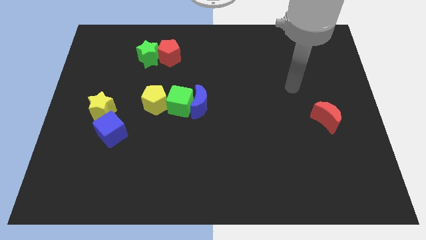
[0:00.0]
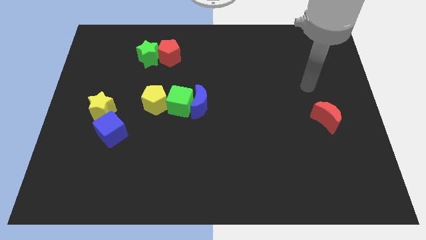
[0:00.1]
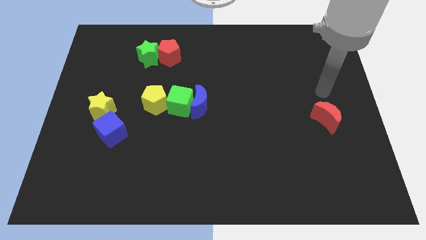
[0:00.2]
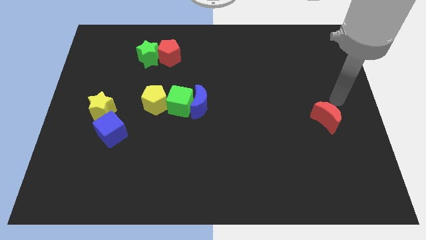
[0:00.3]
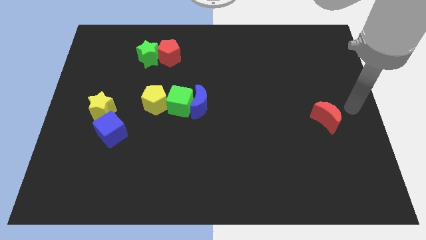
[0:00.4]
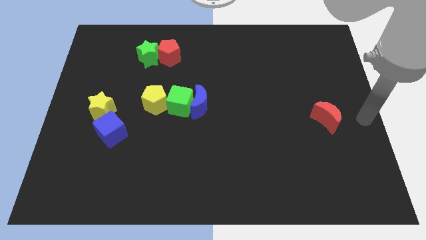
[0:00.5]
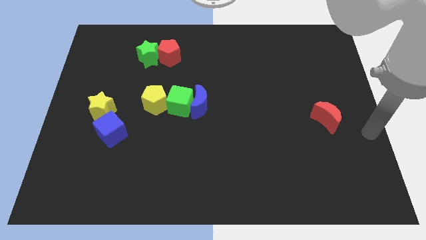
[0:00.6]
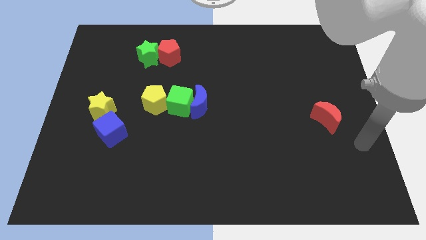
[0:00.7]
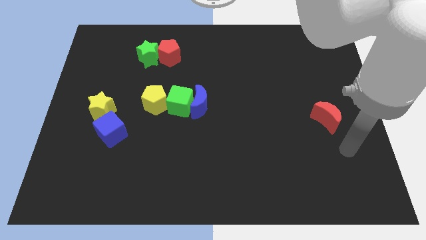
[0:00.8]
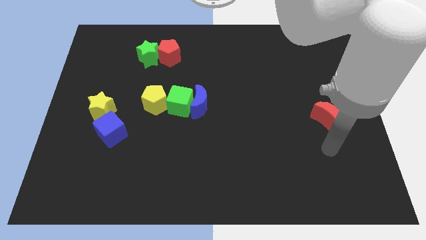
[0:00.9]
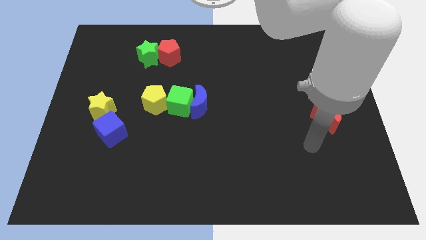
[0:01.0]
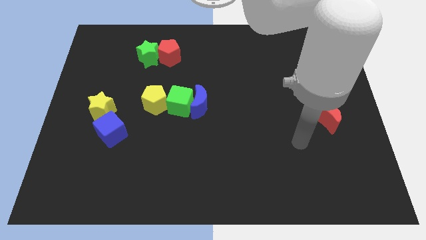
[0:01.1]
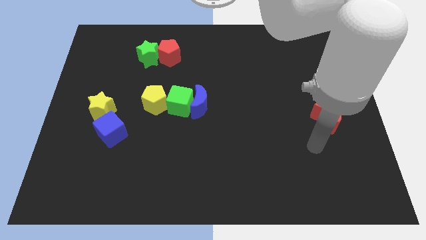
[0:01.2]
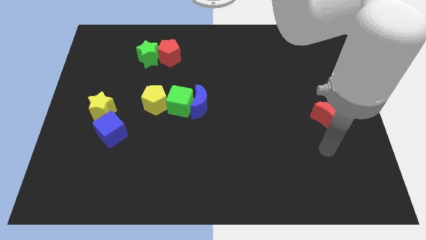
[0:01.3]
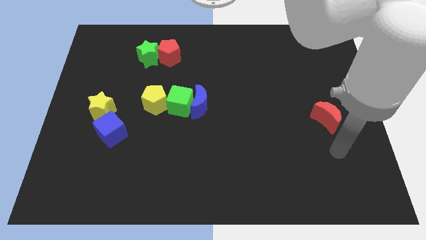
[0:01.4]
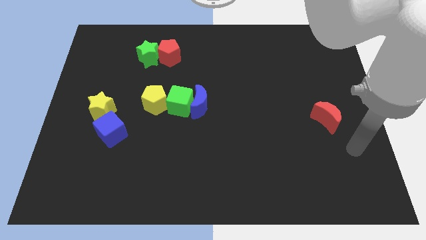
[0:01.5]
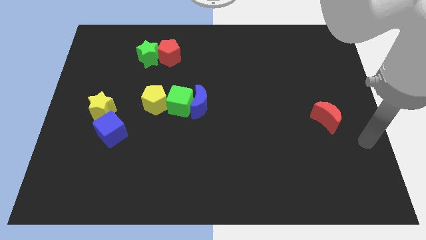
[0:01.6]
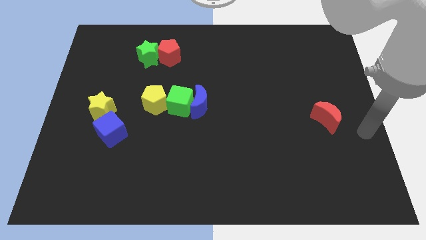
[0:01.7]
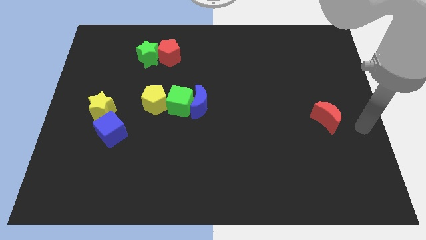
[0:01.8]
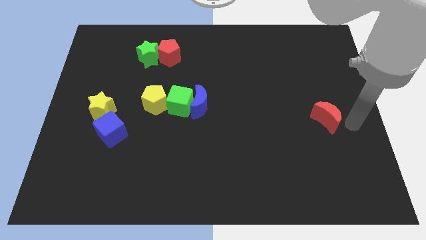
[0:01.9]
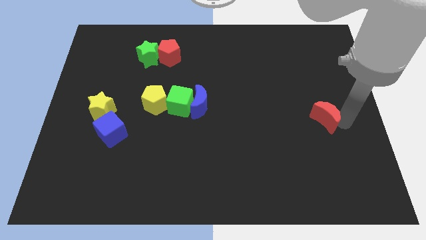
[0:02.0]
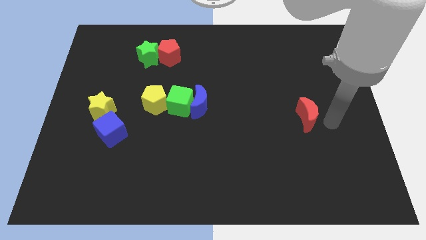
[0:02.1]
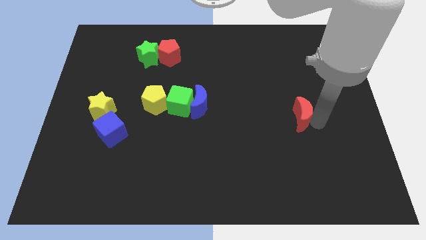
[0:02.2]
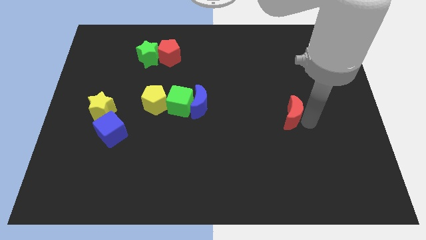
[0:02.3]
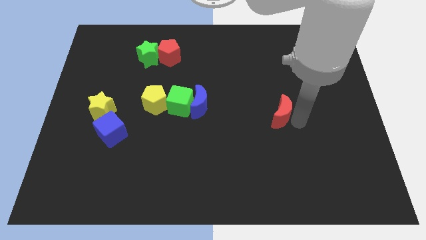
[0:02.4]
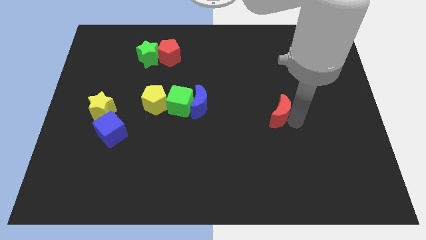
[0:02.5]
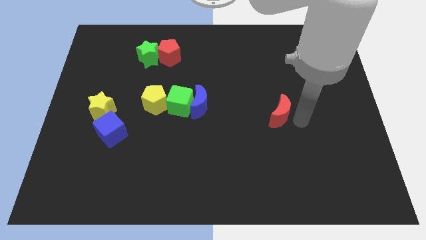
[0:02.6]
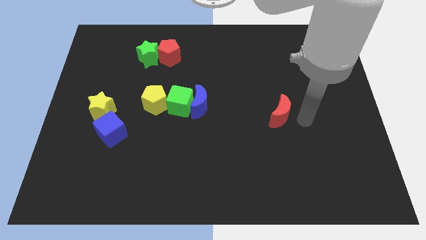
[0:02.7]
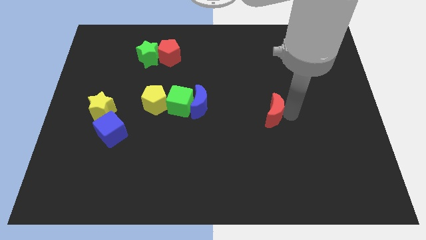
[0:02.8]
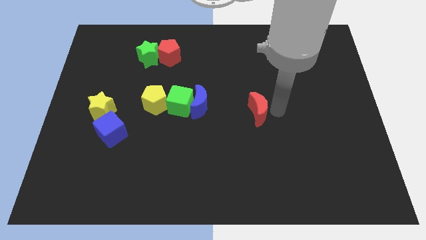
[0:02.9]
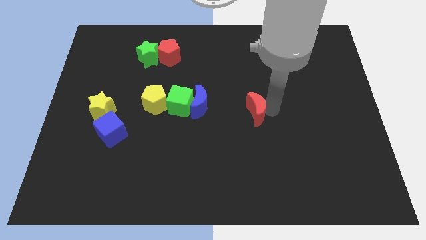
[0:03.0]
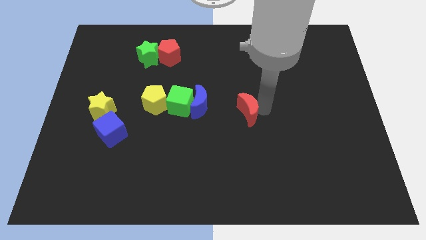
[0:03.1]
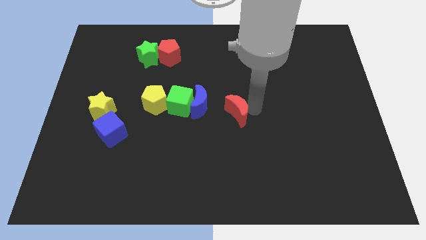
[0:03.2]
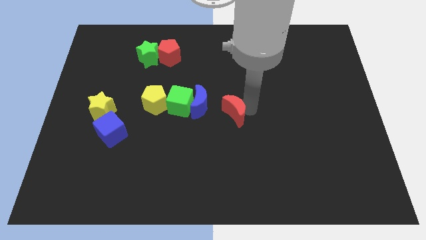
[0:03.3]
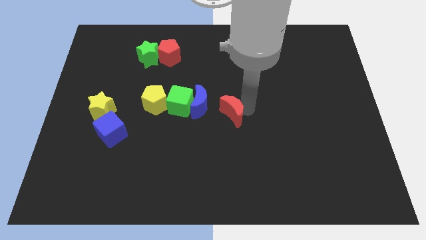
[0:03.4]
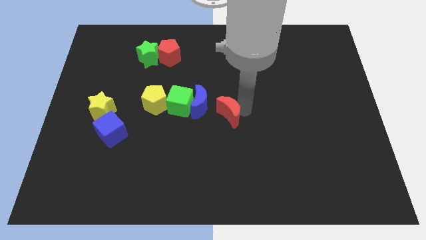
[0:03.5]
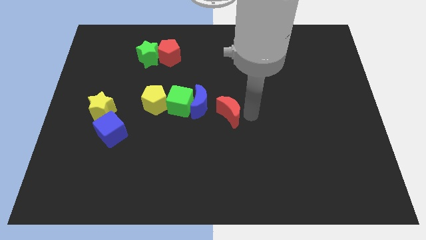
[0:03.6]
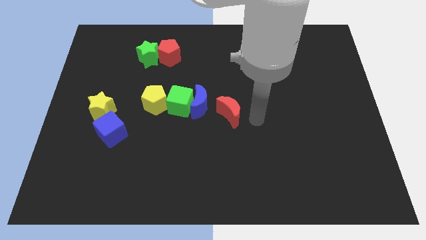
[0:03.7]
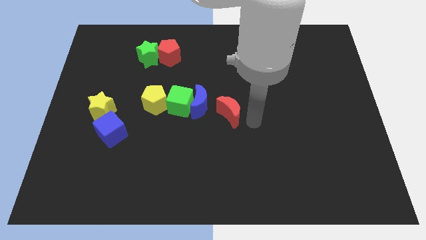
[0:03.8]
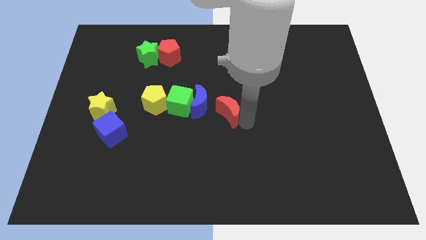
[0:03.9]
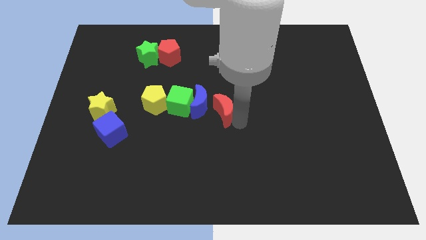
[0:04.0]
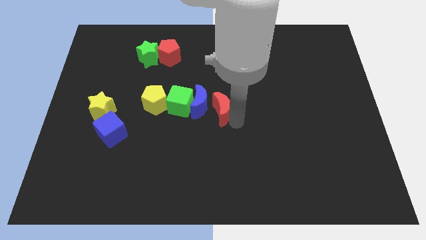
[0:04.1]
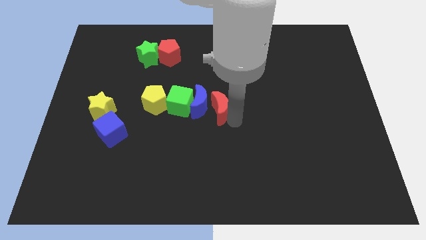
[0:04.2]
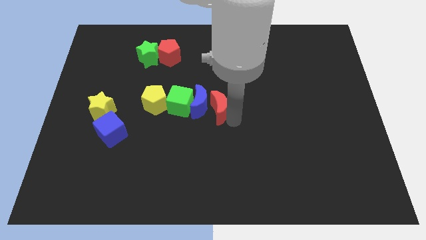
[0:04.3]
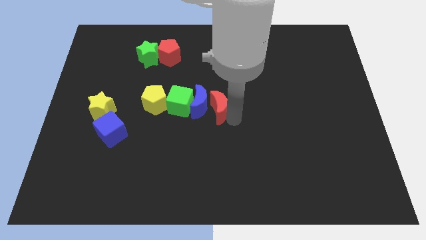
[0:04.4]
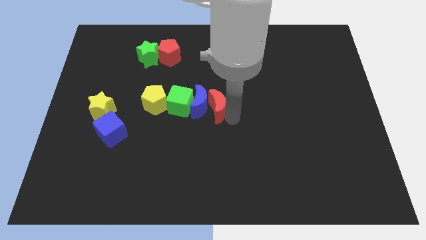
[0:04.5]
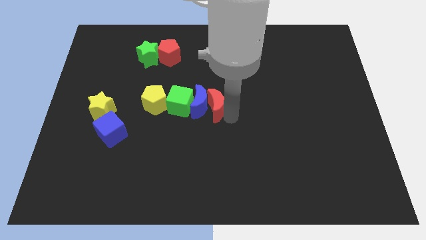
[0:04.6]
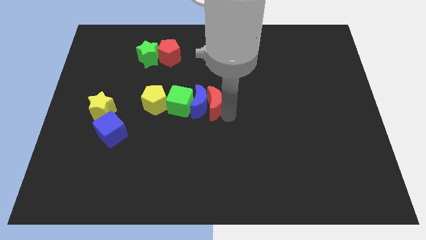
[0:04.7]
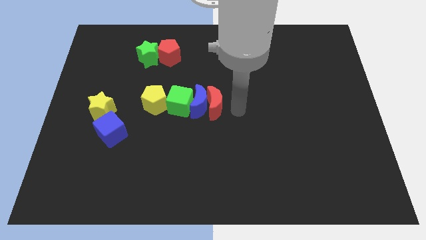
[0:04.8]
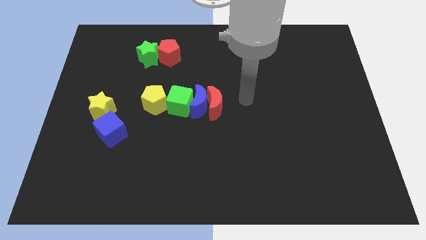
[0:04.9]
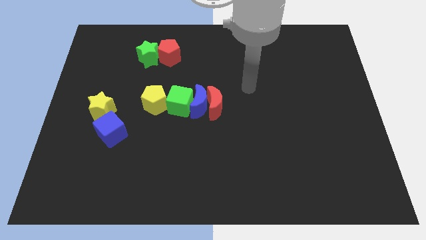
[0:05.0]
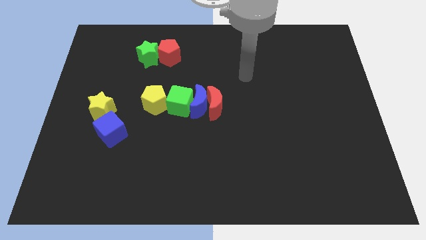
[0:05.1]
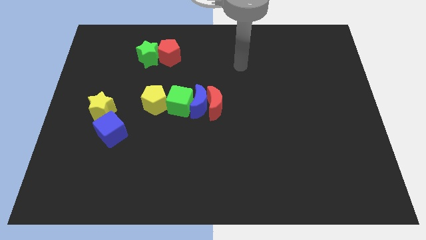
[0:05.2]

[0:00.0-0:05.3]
place red moon to the right of blue moon

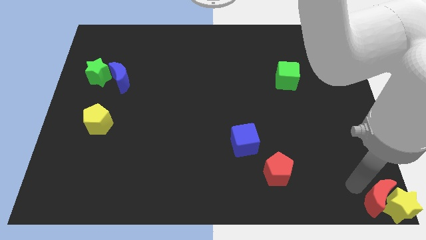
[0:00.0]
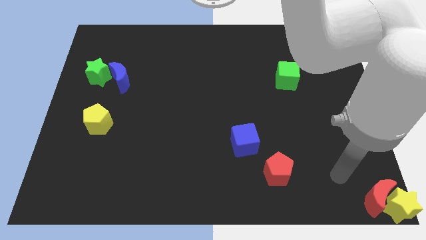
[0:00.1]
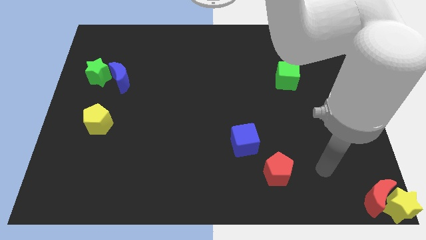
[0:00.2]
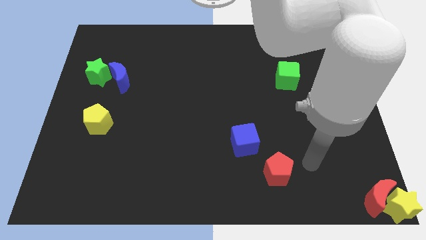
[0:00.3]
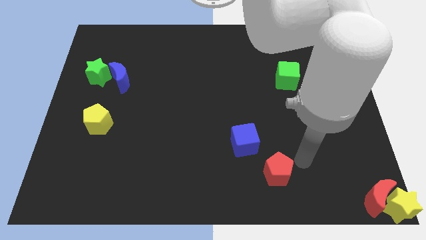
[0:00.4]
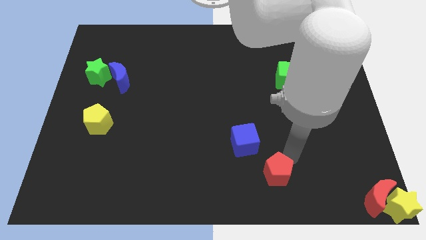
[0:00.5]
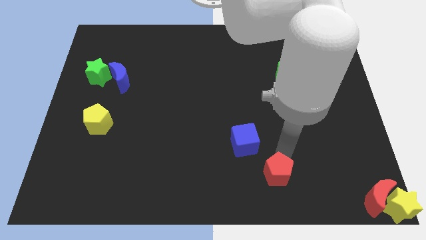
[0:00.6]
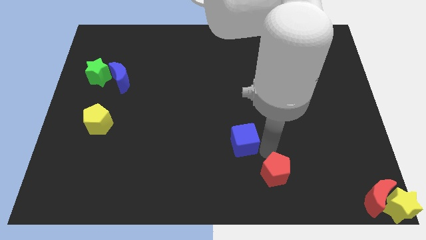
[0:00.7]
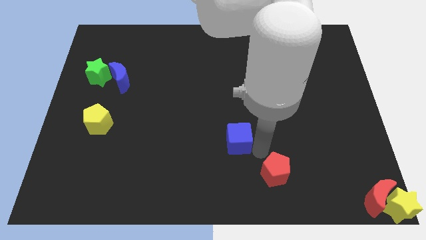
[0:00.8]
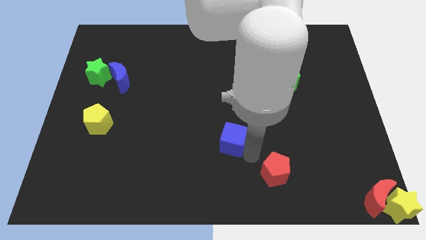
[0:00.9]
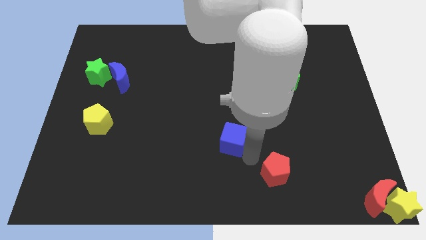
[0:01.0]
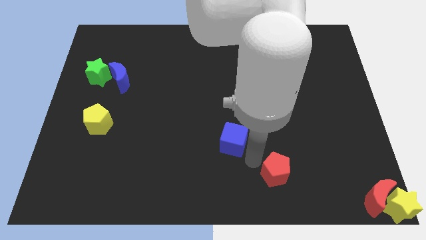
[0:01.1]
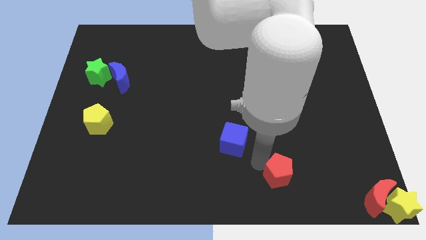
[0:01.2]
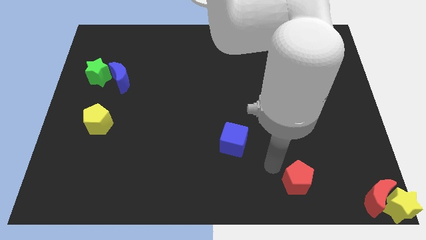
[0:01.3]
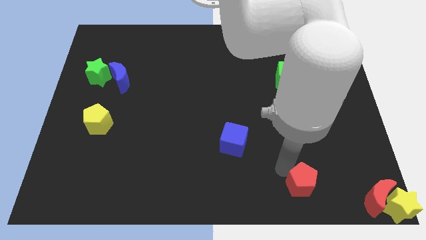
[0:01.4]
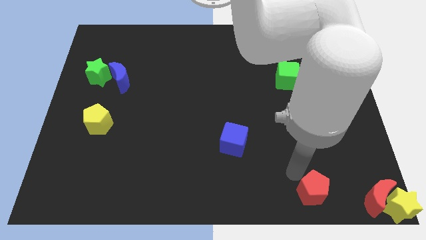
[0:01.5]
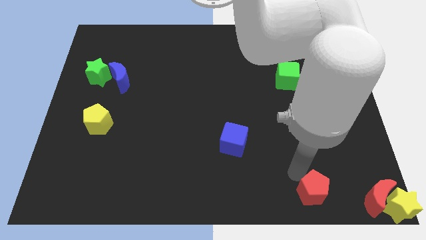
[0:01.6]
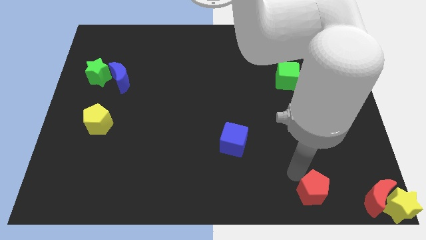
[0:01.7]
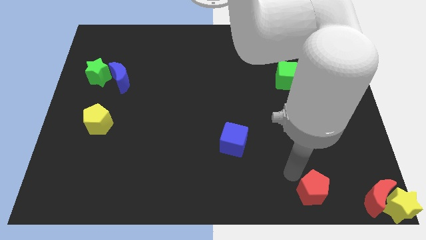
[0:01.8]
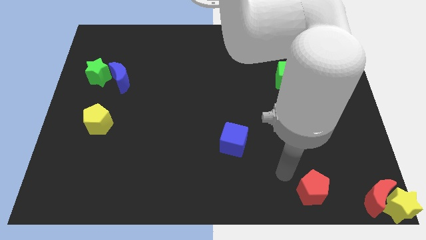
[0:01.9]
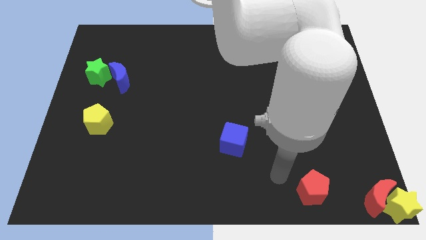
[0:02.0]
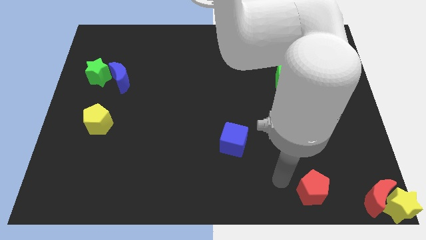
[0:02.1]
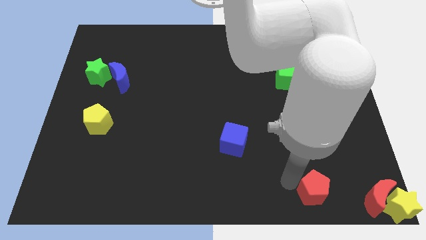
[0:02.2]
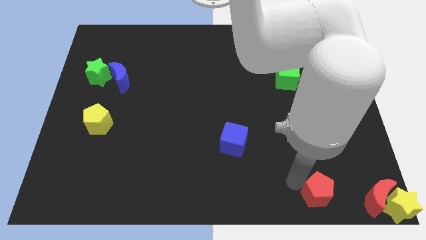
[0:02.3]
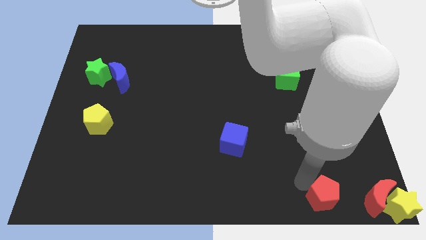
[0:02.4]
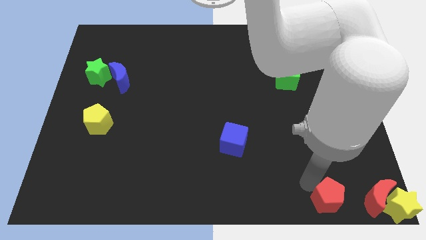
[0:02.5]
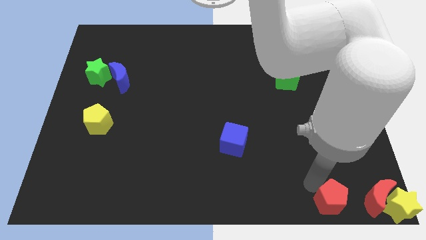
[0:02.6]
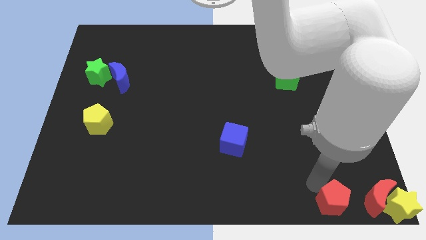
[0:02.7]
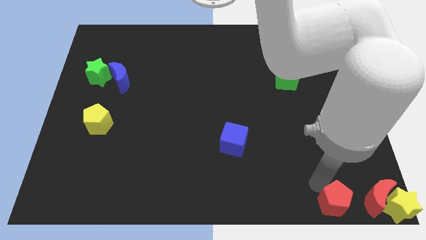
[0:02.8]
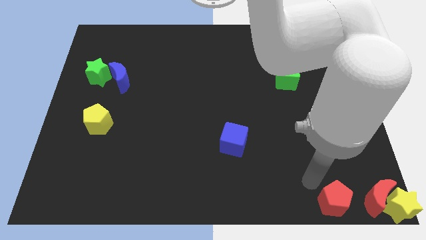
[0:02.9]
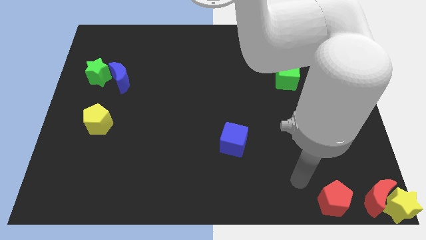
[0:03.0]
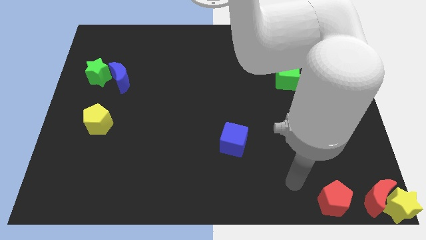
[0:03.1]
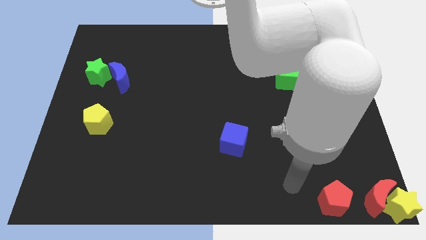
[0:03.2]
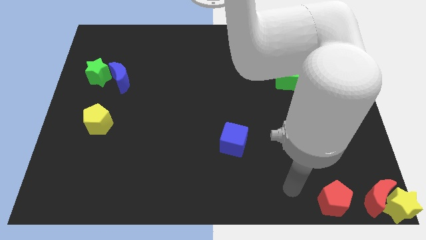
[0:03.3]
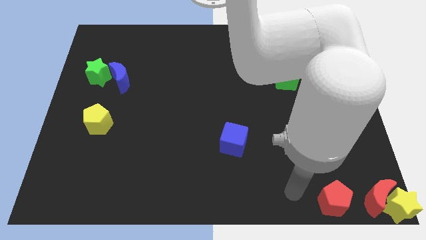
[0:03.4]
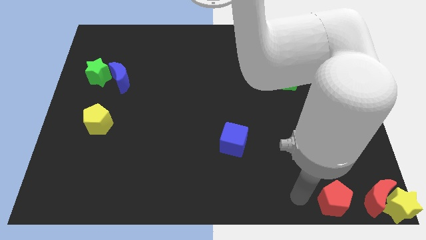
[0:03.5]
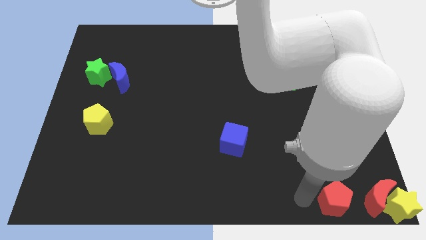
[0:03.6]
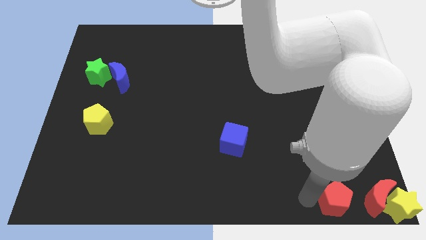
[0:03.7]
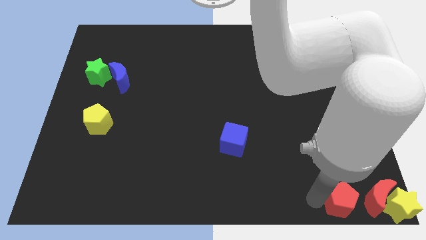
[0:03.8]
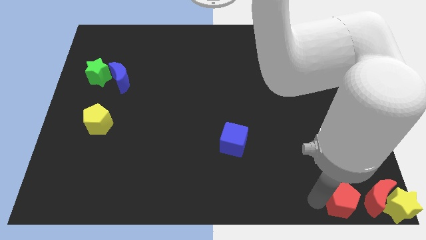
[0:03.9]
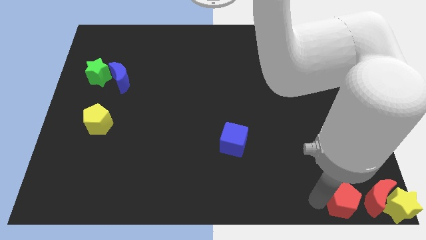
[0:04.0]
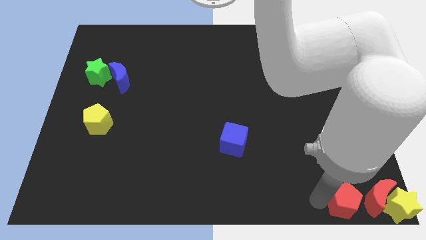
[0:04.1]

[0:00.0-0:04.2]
place the red pentagon left to the red moon
